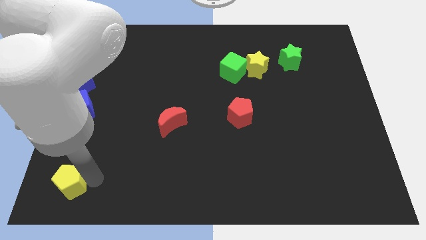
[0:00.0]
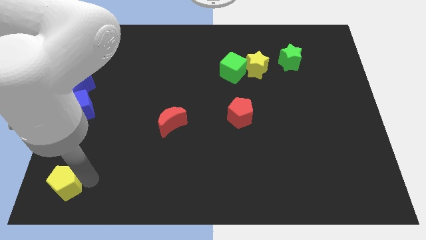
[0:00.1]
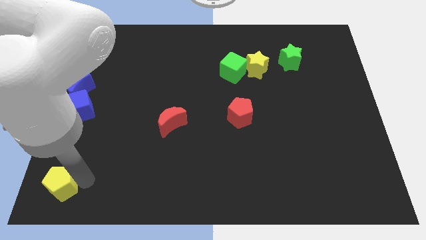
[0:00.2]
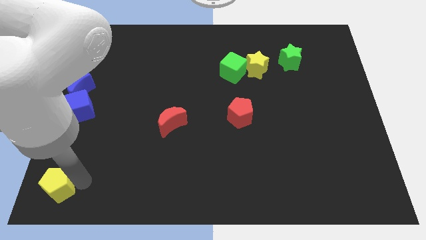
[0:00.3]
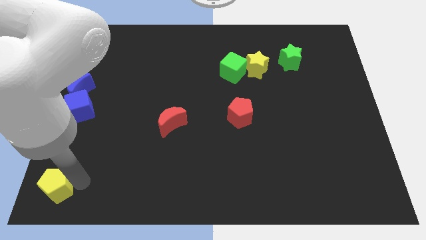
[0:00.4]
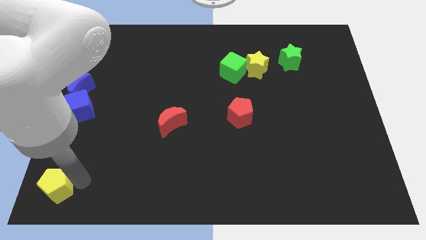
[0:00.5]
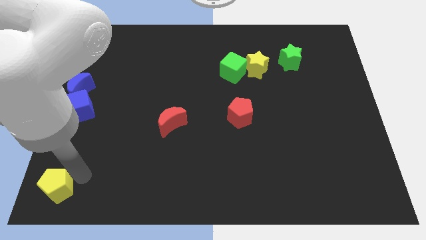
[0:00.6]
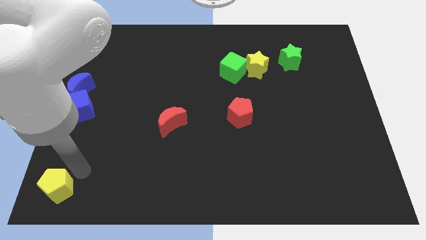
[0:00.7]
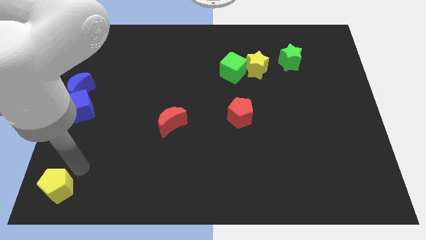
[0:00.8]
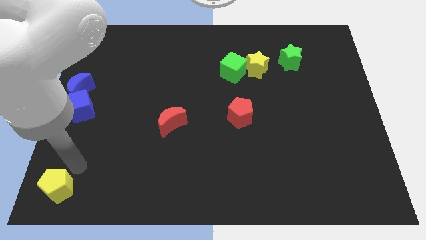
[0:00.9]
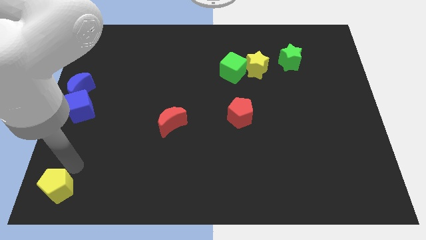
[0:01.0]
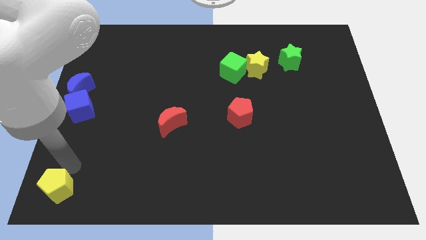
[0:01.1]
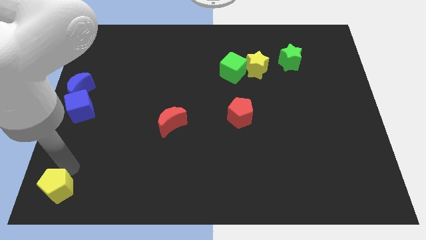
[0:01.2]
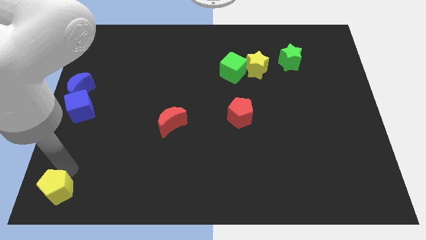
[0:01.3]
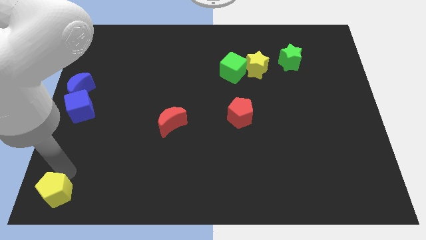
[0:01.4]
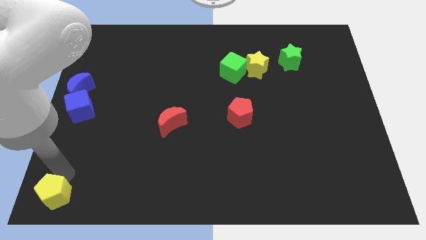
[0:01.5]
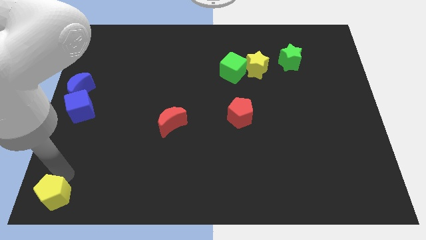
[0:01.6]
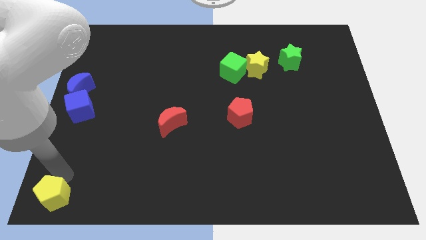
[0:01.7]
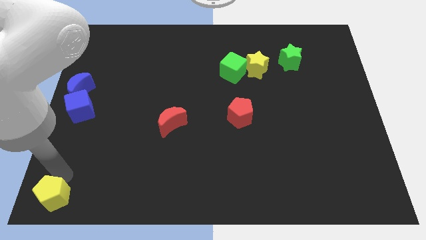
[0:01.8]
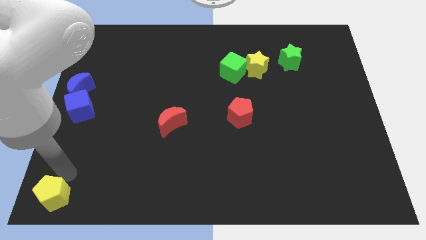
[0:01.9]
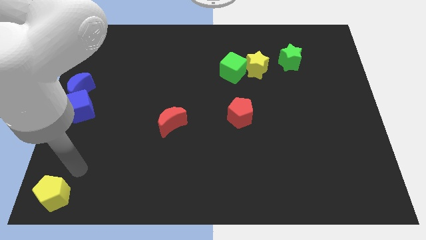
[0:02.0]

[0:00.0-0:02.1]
move the yellow pentagon to the bottom left corner of the board

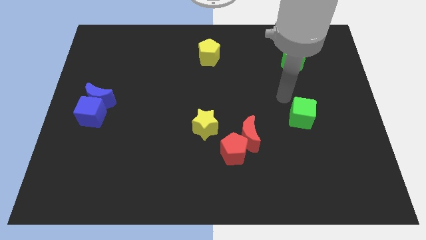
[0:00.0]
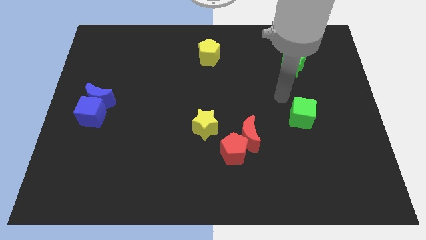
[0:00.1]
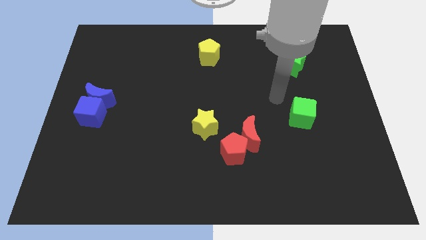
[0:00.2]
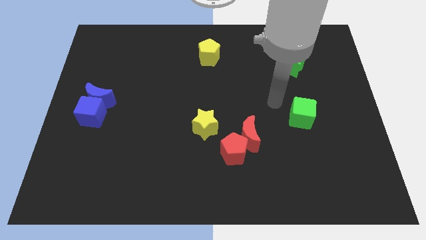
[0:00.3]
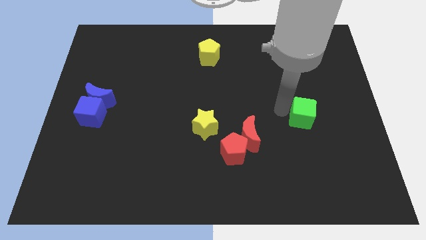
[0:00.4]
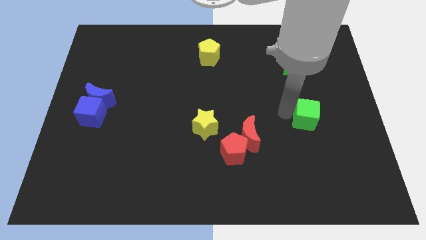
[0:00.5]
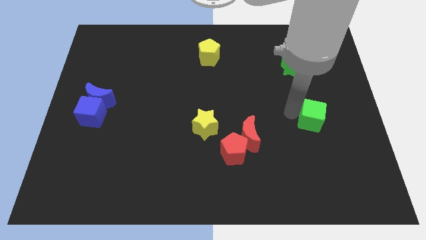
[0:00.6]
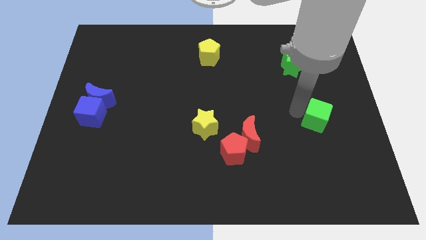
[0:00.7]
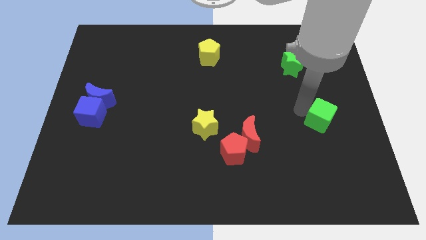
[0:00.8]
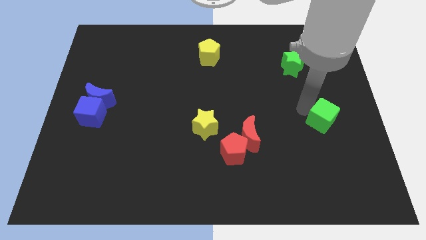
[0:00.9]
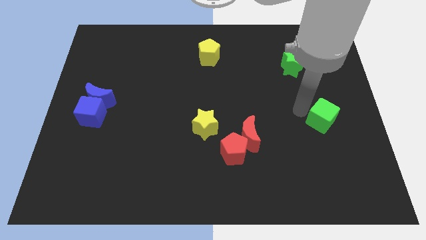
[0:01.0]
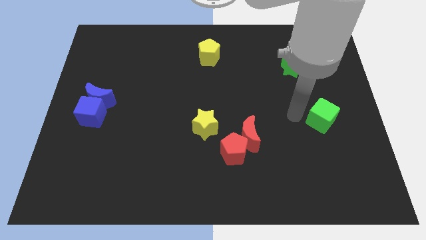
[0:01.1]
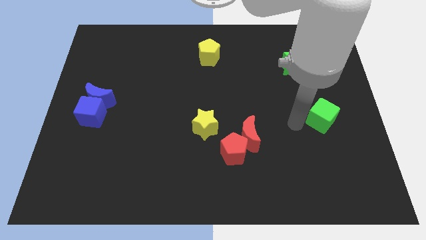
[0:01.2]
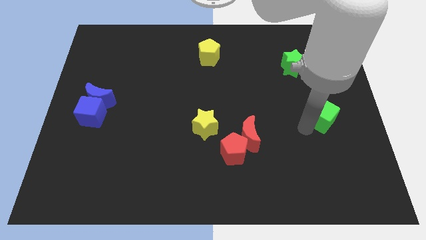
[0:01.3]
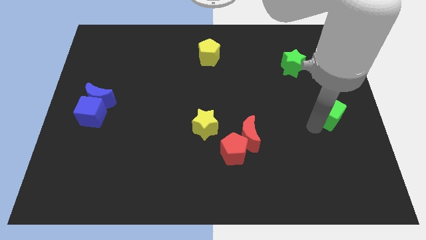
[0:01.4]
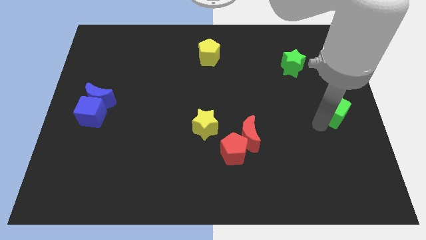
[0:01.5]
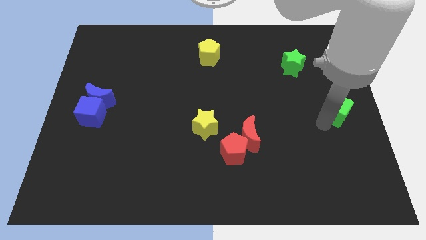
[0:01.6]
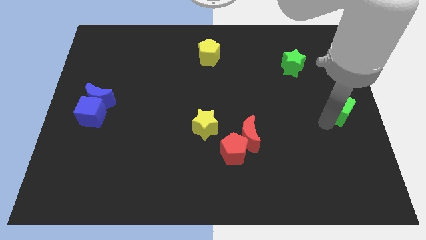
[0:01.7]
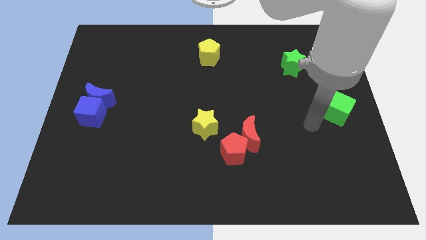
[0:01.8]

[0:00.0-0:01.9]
push the green cube slightly to the right

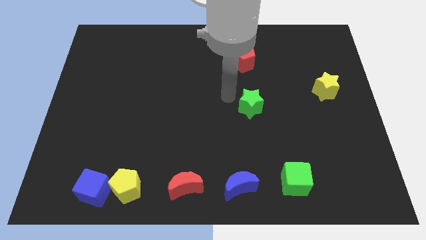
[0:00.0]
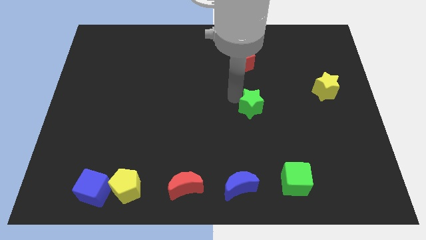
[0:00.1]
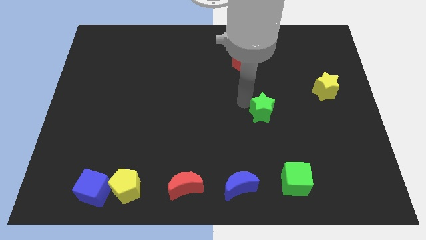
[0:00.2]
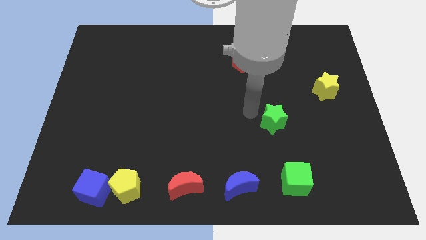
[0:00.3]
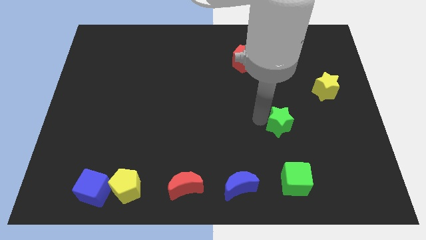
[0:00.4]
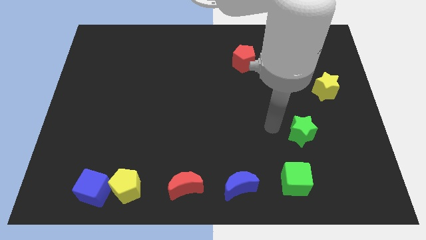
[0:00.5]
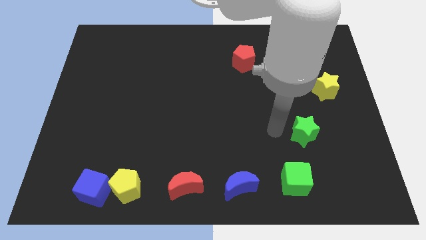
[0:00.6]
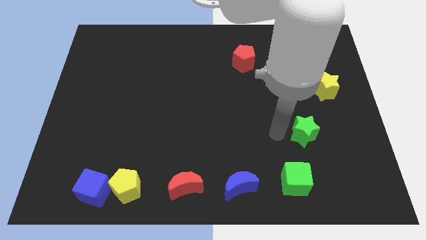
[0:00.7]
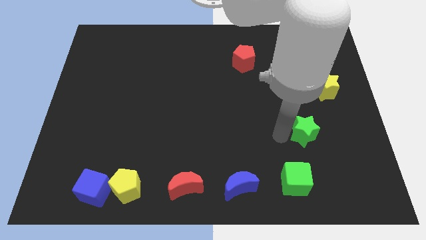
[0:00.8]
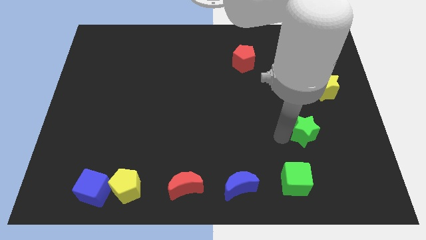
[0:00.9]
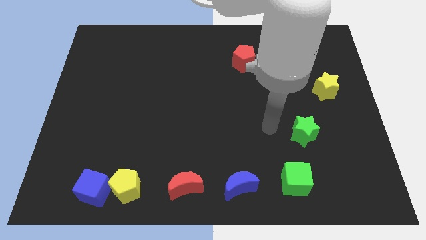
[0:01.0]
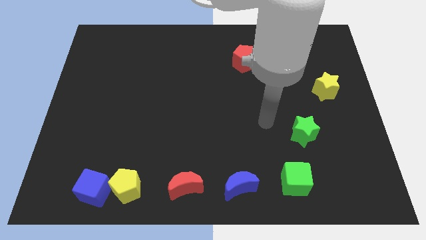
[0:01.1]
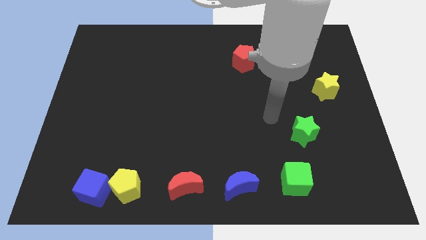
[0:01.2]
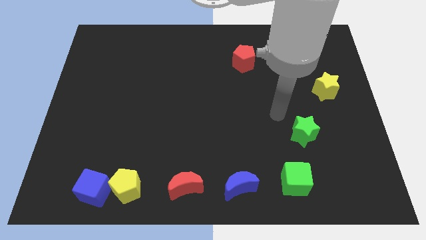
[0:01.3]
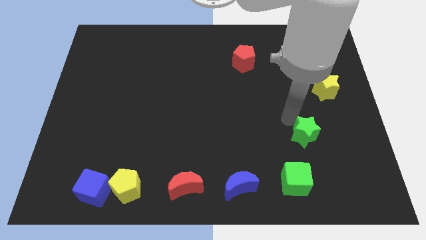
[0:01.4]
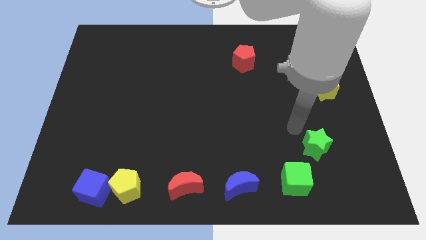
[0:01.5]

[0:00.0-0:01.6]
make a diagonal line with green blocks and the yellow star

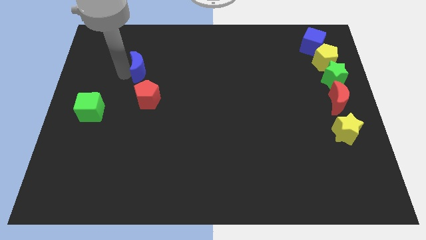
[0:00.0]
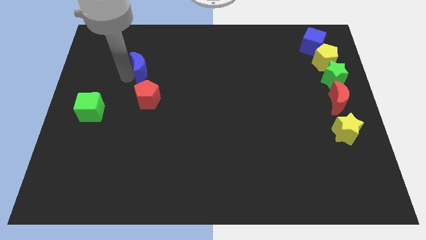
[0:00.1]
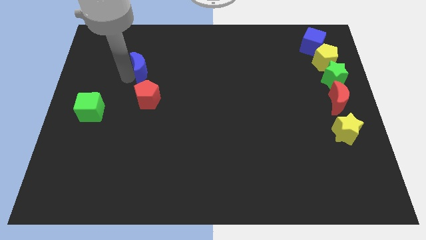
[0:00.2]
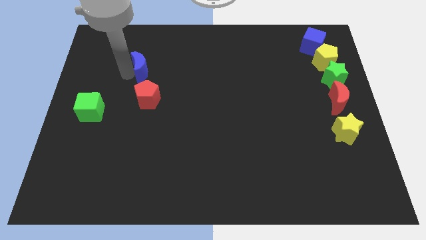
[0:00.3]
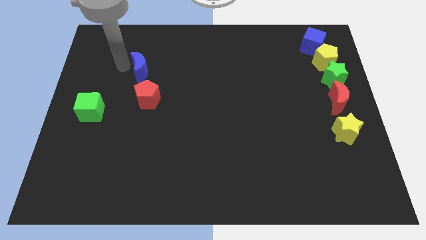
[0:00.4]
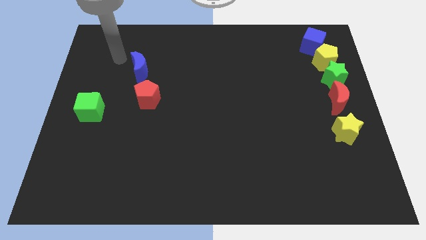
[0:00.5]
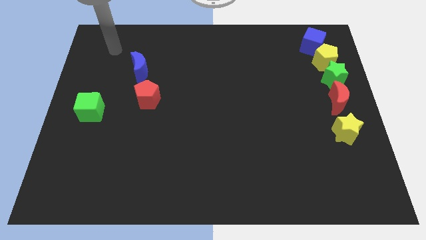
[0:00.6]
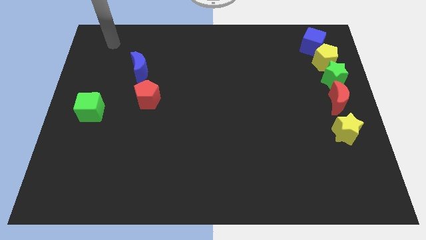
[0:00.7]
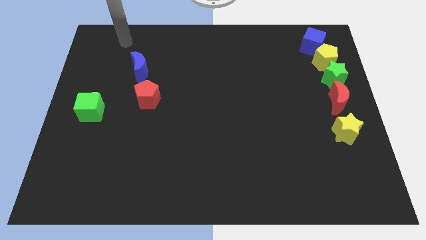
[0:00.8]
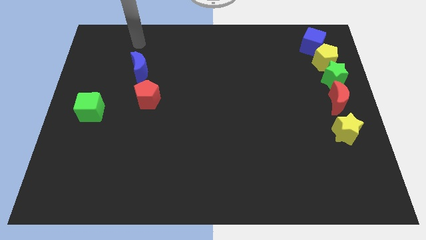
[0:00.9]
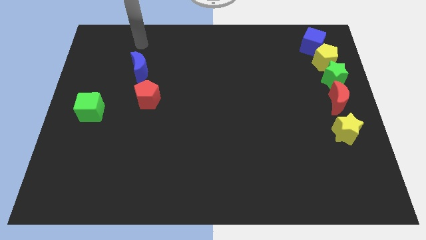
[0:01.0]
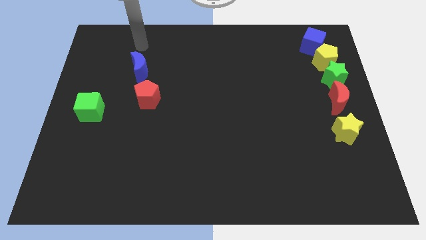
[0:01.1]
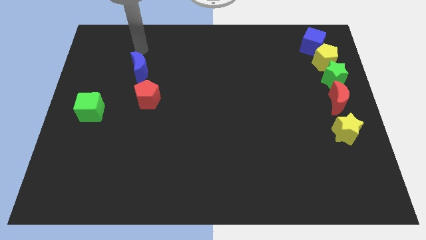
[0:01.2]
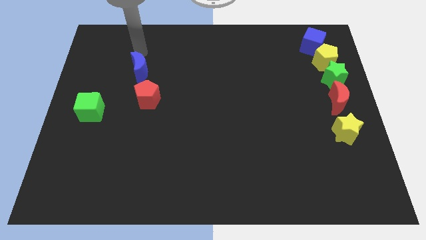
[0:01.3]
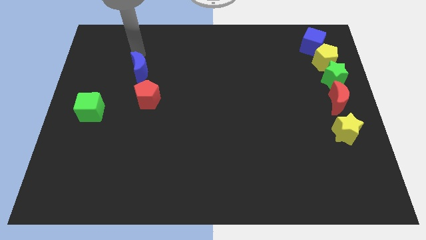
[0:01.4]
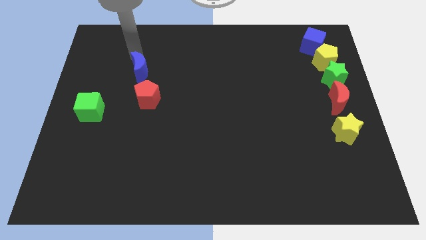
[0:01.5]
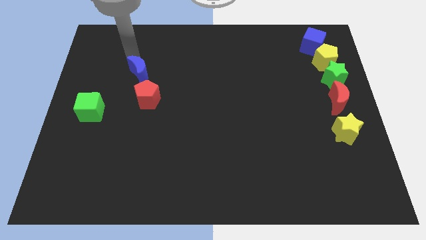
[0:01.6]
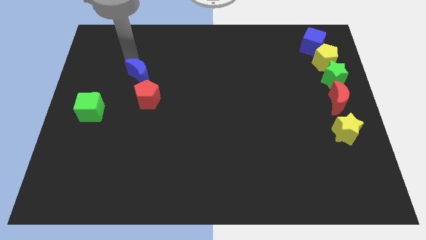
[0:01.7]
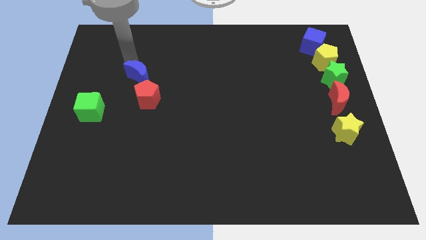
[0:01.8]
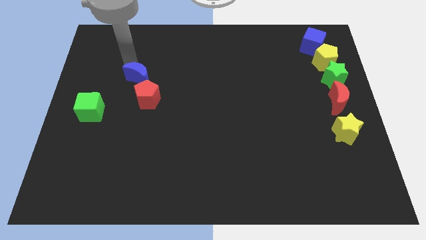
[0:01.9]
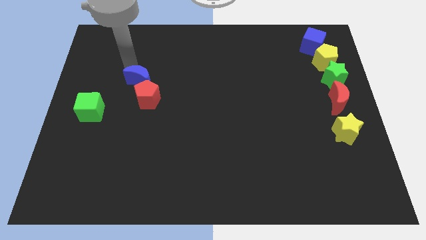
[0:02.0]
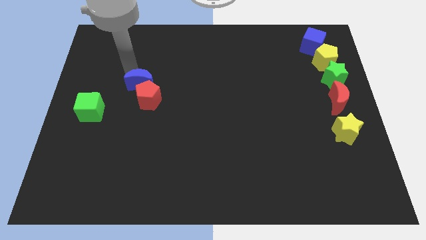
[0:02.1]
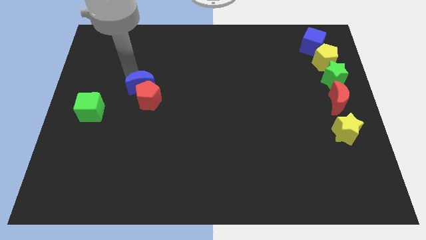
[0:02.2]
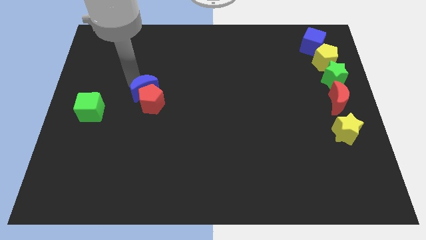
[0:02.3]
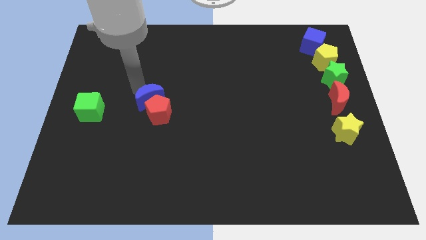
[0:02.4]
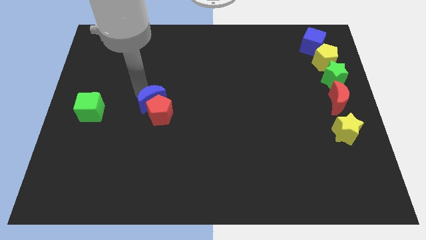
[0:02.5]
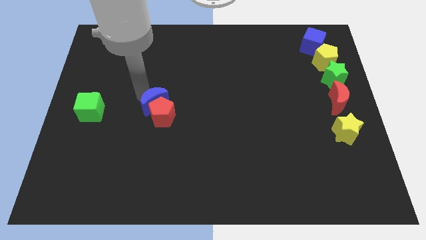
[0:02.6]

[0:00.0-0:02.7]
push blue cube into red pentagon

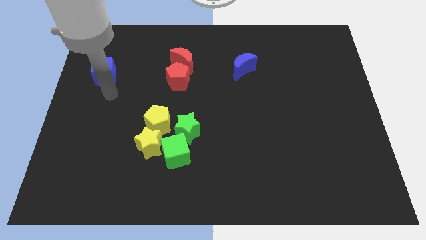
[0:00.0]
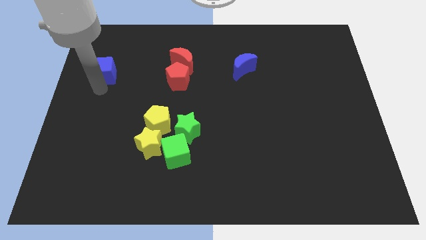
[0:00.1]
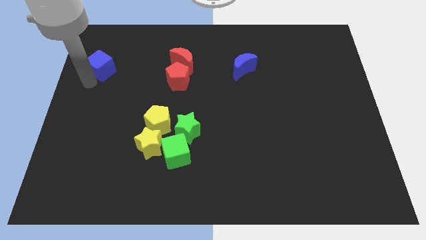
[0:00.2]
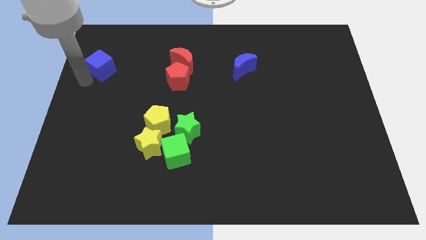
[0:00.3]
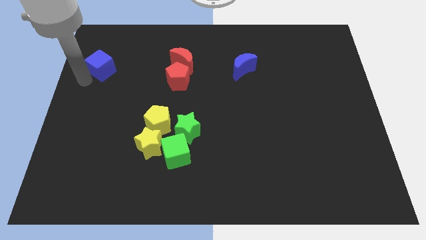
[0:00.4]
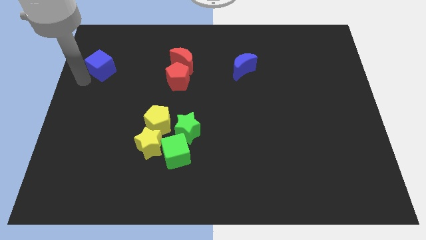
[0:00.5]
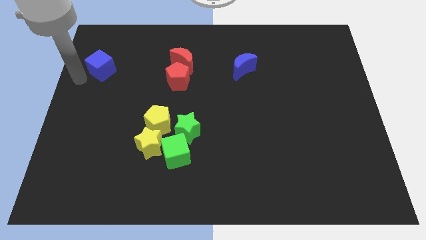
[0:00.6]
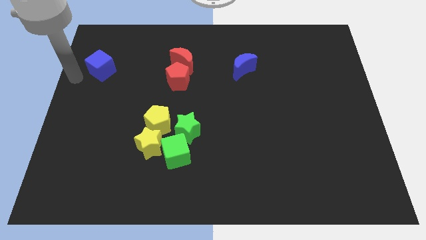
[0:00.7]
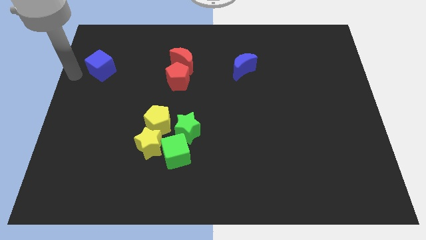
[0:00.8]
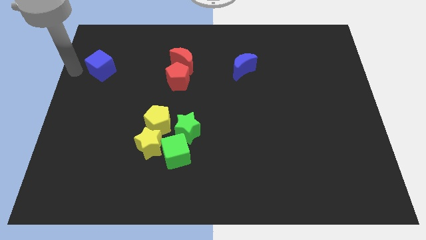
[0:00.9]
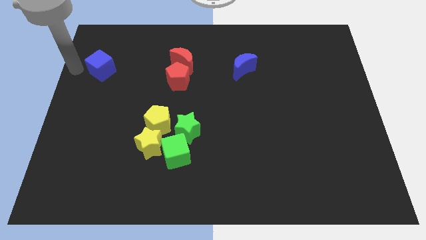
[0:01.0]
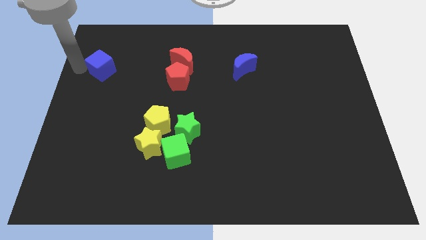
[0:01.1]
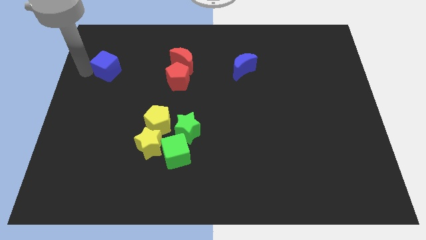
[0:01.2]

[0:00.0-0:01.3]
tap the bottom side of the blue cube
